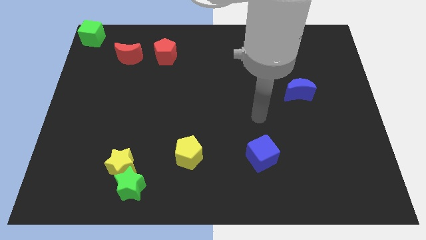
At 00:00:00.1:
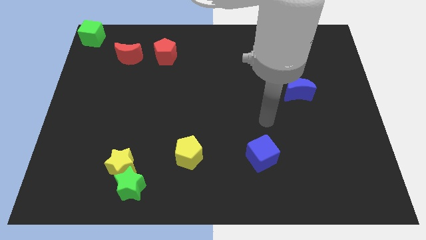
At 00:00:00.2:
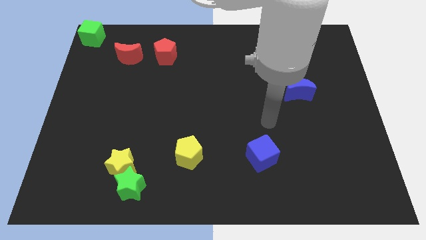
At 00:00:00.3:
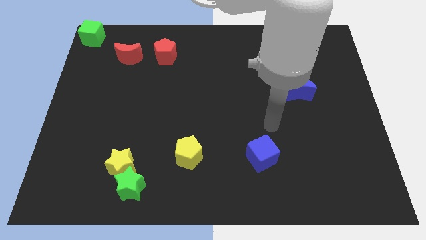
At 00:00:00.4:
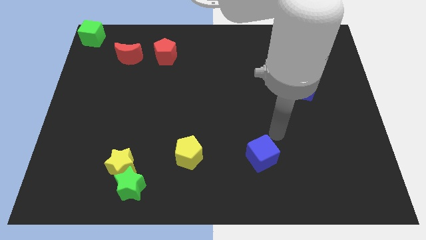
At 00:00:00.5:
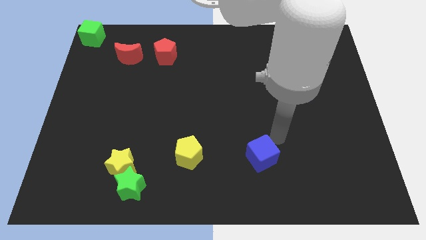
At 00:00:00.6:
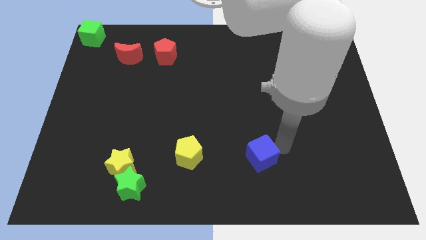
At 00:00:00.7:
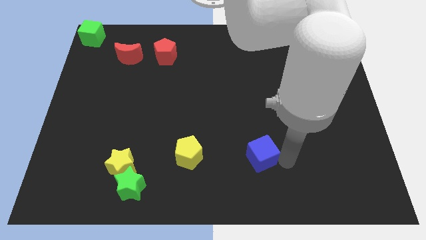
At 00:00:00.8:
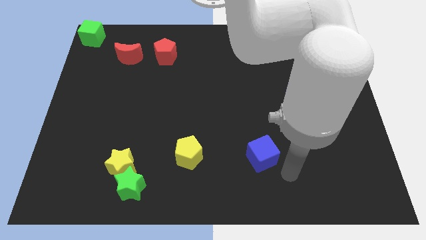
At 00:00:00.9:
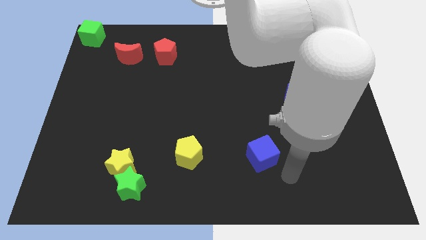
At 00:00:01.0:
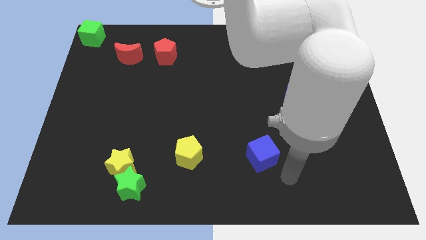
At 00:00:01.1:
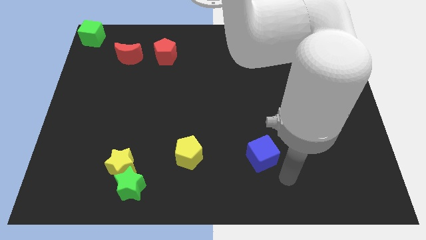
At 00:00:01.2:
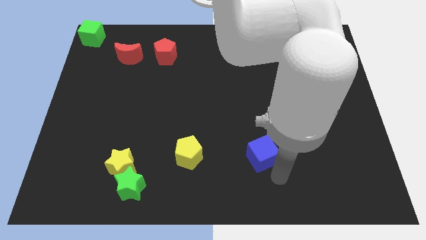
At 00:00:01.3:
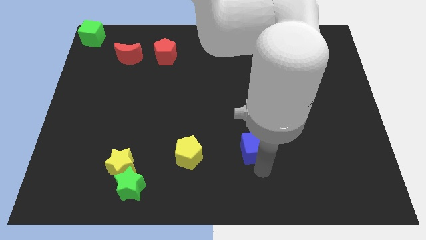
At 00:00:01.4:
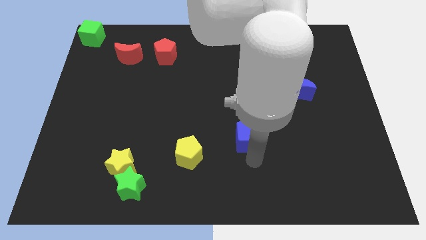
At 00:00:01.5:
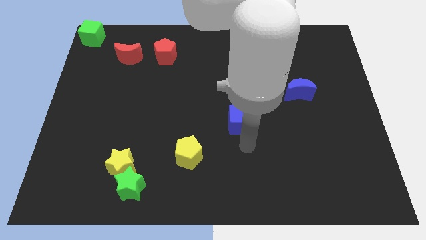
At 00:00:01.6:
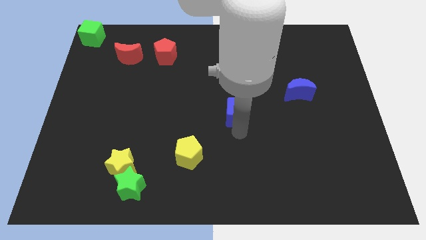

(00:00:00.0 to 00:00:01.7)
push the blue cube towards the top

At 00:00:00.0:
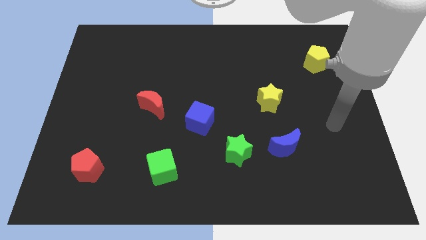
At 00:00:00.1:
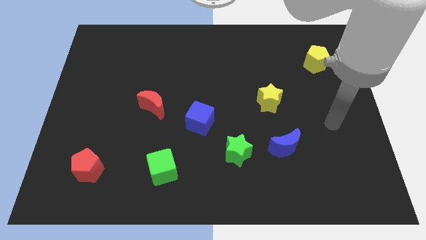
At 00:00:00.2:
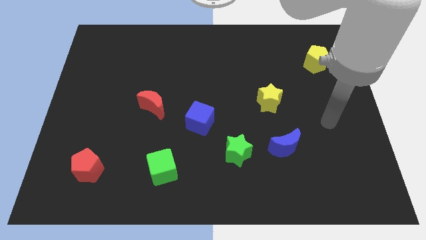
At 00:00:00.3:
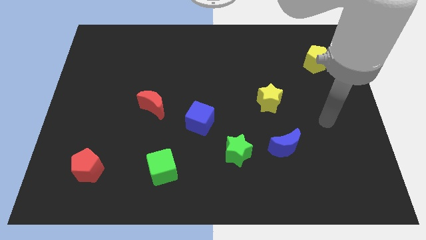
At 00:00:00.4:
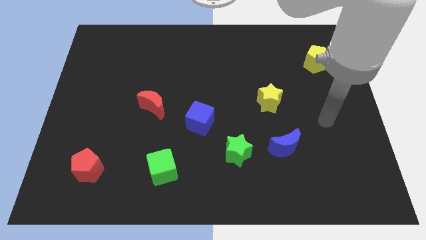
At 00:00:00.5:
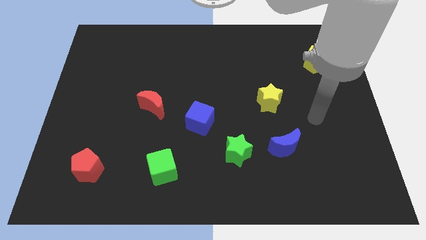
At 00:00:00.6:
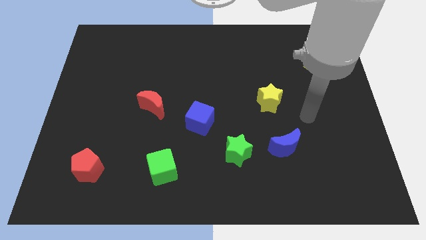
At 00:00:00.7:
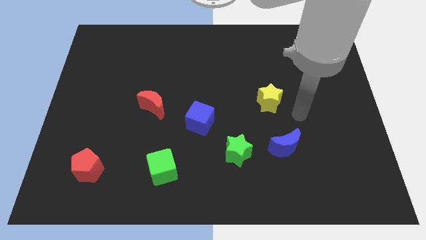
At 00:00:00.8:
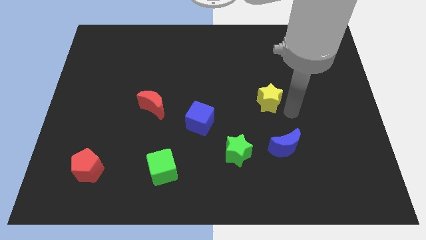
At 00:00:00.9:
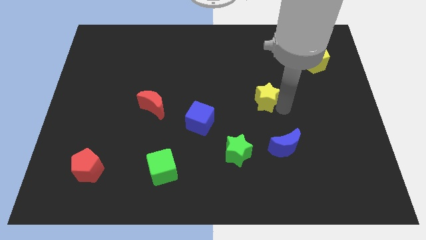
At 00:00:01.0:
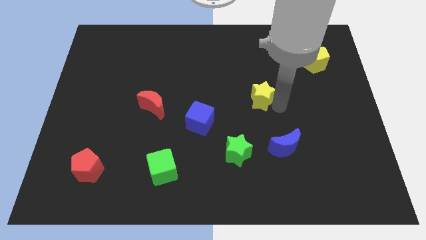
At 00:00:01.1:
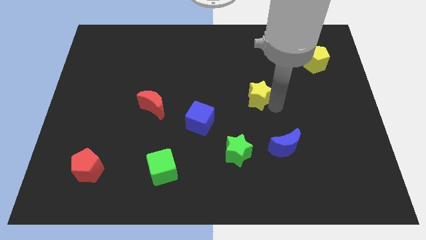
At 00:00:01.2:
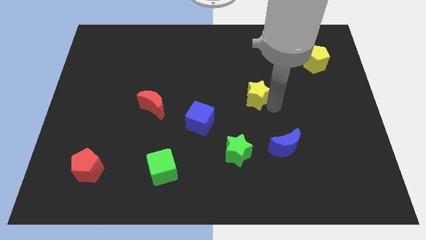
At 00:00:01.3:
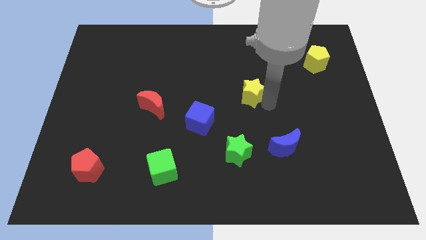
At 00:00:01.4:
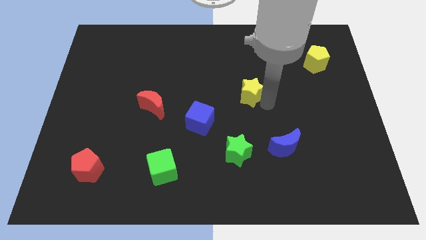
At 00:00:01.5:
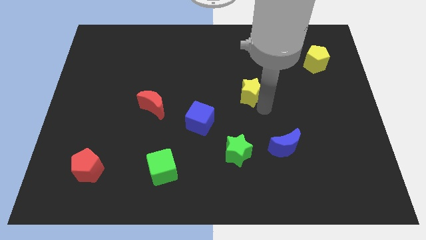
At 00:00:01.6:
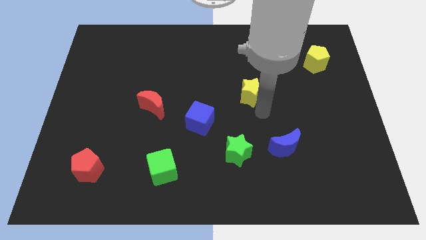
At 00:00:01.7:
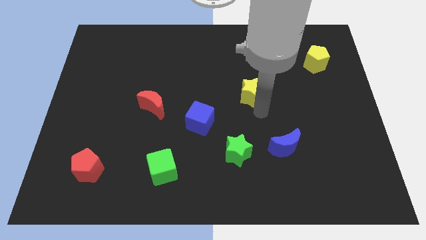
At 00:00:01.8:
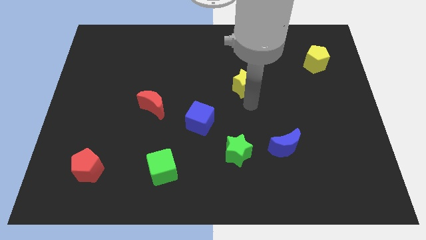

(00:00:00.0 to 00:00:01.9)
slide the yellow star diagonally top right to the red crescent

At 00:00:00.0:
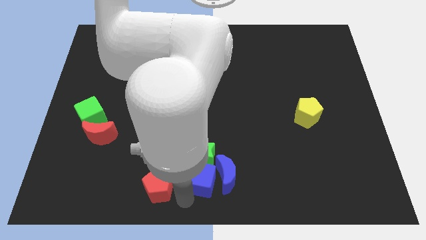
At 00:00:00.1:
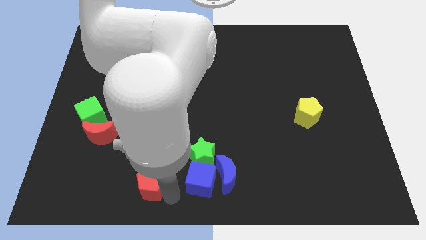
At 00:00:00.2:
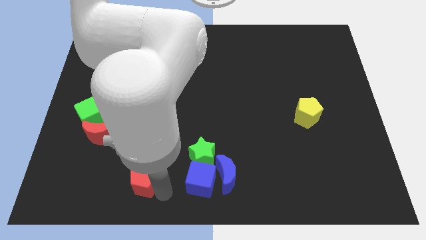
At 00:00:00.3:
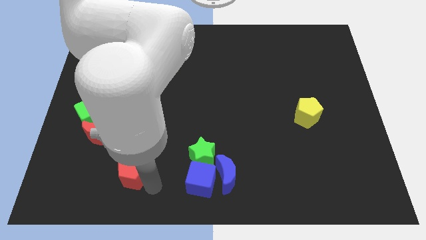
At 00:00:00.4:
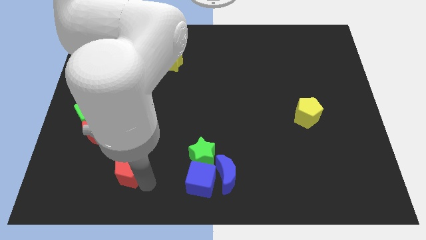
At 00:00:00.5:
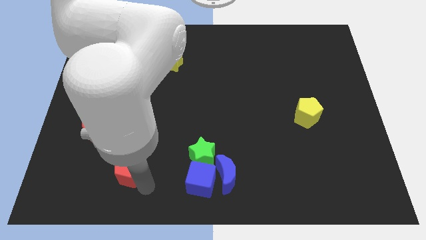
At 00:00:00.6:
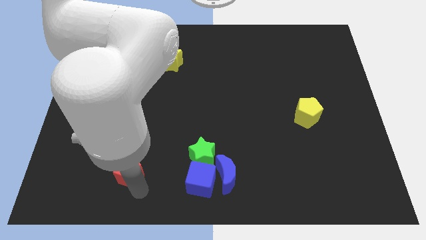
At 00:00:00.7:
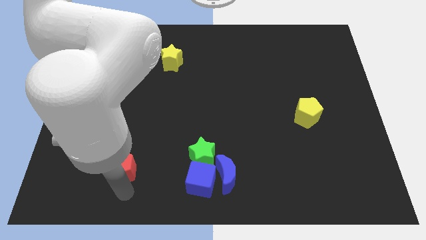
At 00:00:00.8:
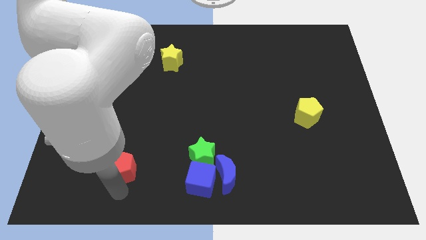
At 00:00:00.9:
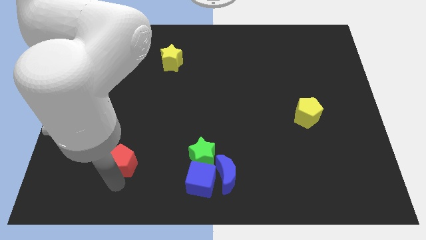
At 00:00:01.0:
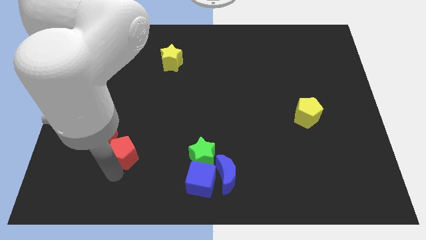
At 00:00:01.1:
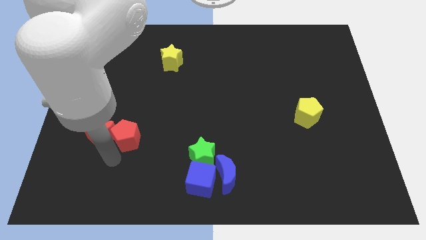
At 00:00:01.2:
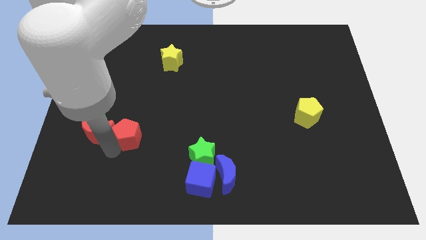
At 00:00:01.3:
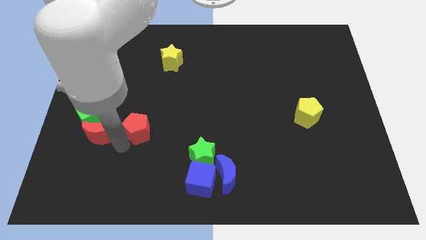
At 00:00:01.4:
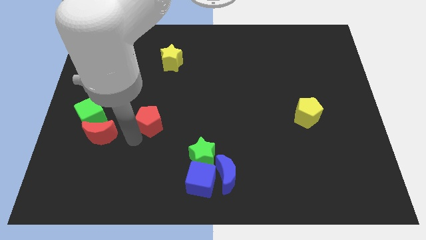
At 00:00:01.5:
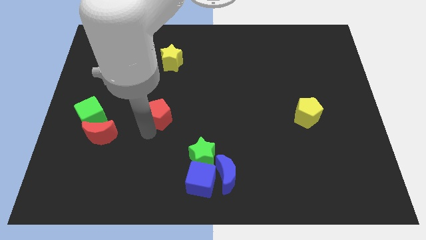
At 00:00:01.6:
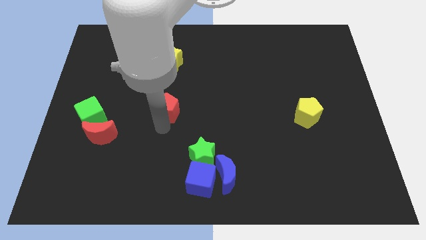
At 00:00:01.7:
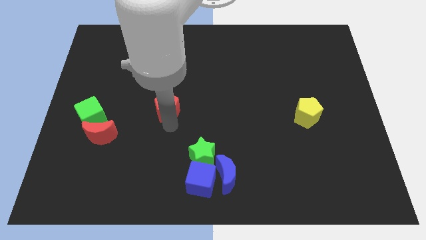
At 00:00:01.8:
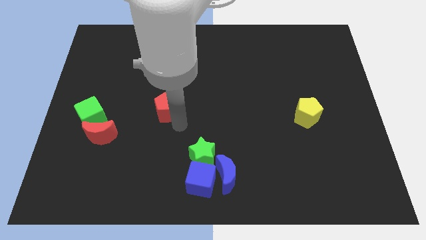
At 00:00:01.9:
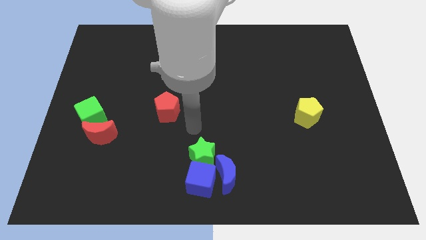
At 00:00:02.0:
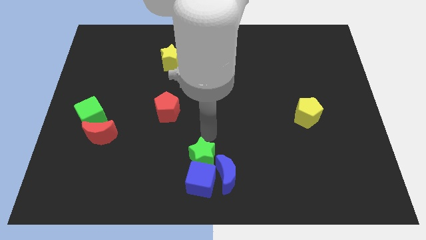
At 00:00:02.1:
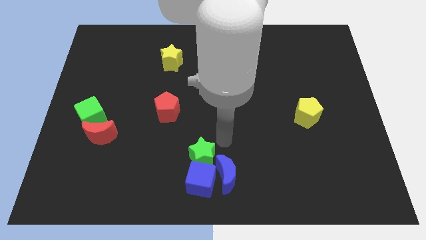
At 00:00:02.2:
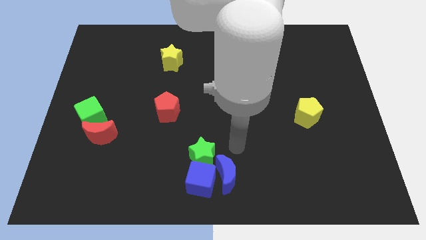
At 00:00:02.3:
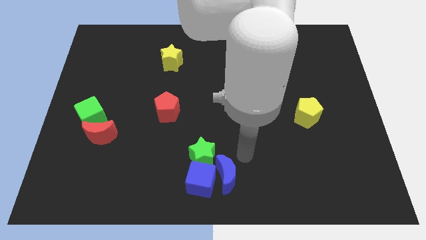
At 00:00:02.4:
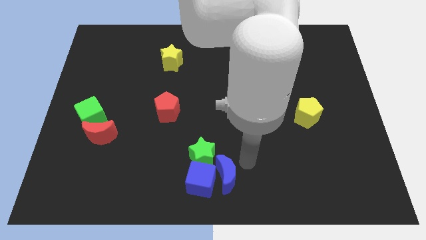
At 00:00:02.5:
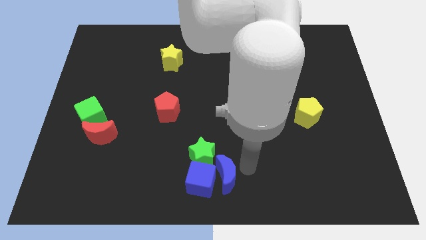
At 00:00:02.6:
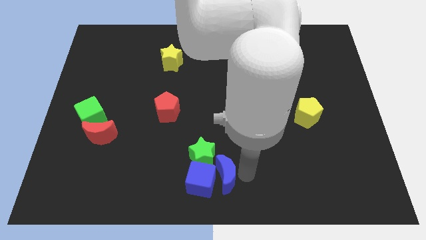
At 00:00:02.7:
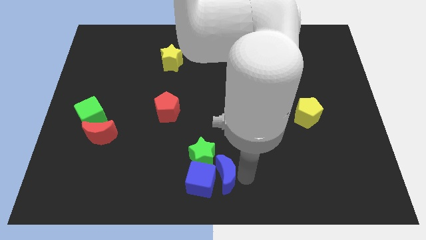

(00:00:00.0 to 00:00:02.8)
push the red pentagon parallel to the bottom of the yellow star

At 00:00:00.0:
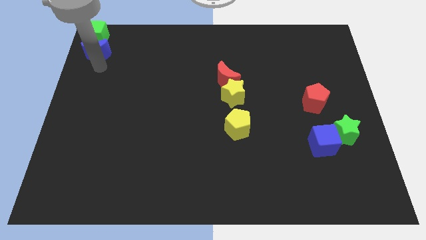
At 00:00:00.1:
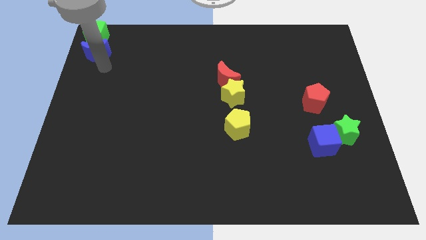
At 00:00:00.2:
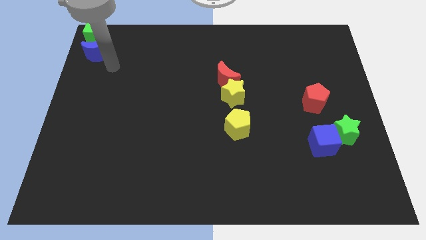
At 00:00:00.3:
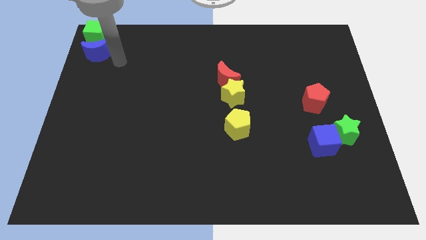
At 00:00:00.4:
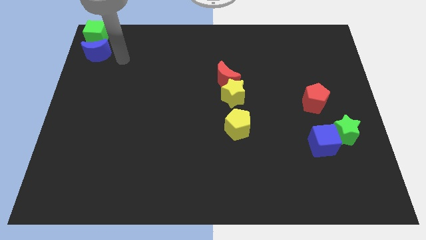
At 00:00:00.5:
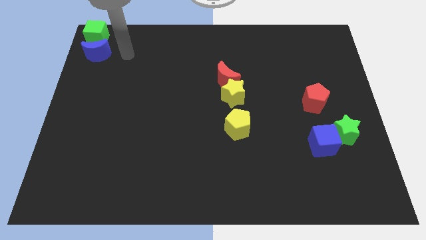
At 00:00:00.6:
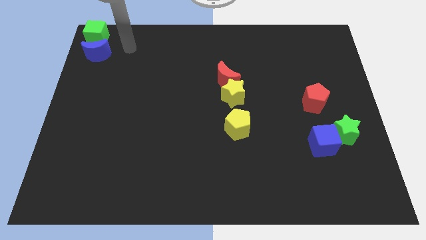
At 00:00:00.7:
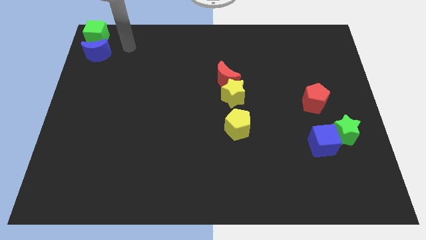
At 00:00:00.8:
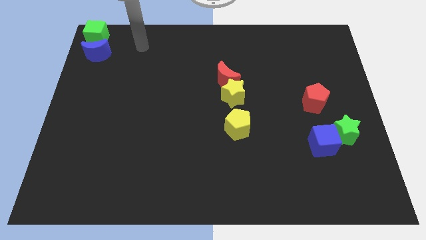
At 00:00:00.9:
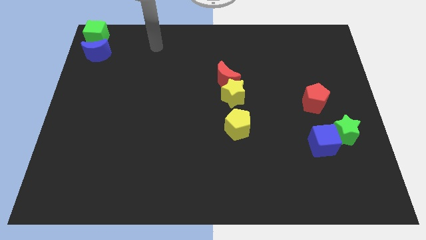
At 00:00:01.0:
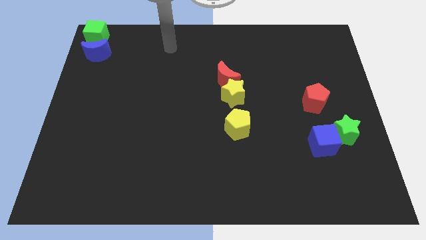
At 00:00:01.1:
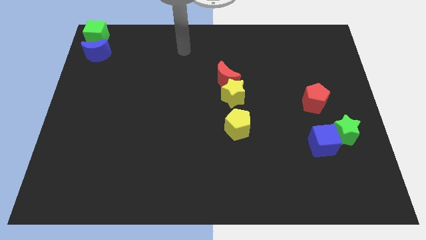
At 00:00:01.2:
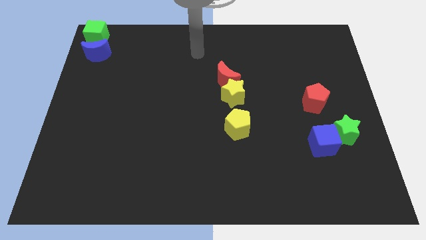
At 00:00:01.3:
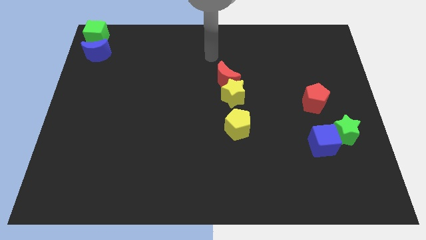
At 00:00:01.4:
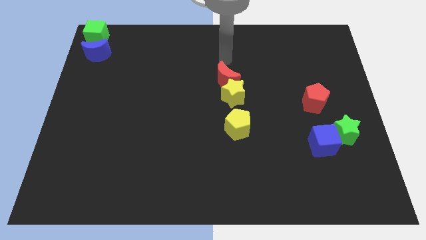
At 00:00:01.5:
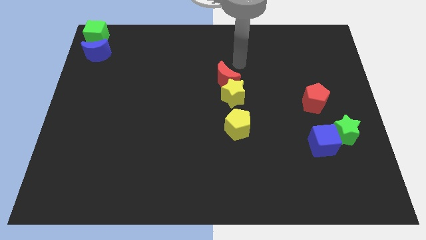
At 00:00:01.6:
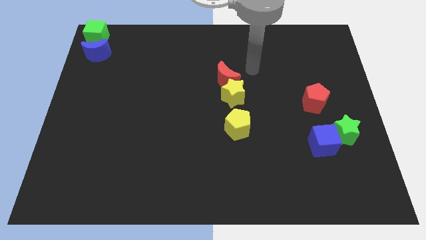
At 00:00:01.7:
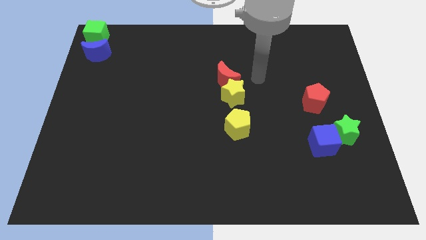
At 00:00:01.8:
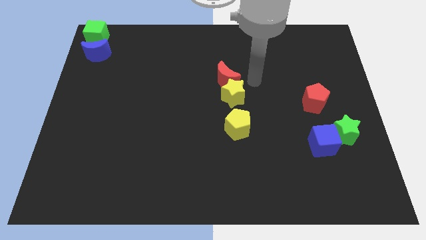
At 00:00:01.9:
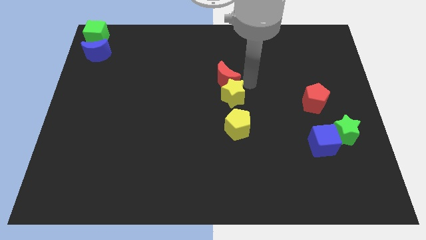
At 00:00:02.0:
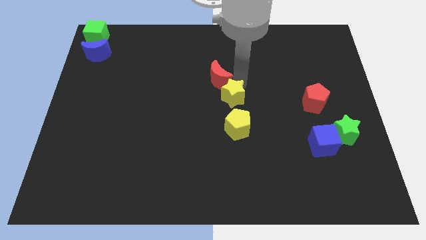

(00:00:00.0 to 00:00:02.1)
tap the red crescent

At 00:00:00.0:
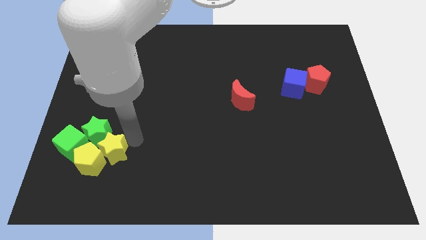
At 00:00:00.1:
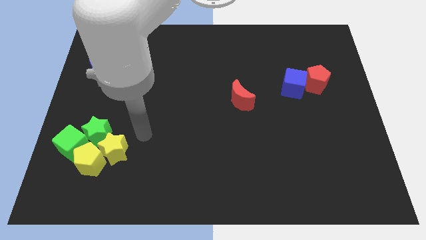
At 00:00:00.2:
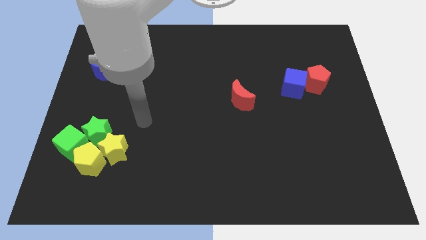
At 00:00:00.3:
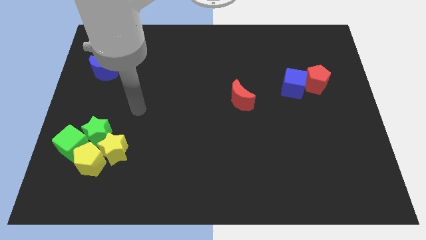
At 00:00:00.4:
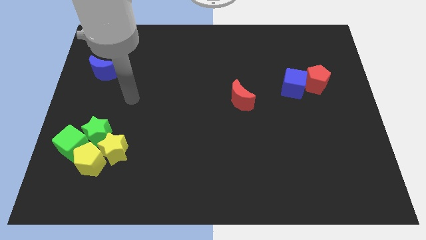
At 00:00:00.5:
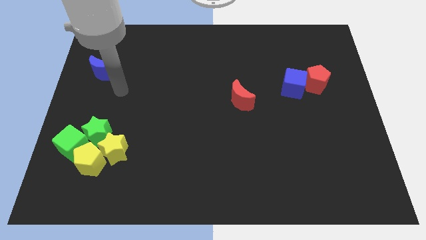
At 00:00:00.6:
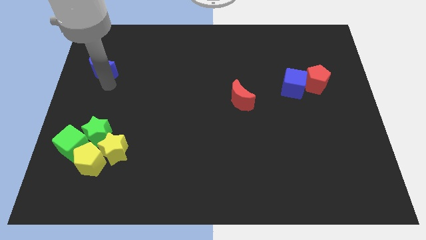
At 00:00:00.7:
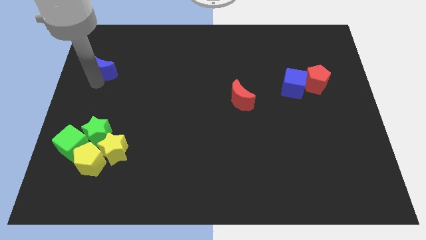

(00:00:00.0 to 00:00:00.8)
point your arm at the bottom of the blue crescent
